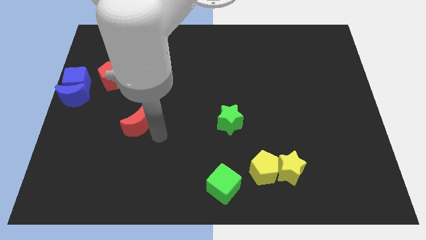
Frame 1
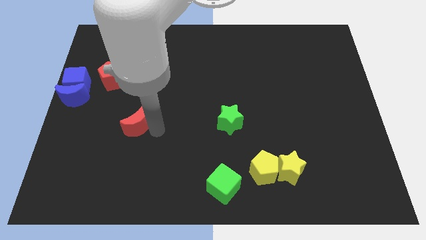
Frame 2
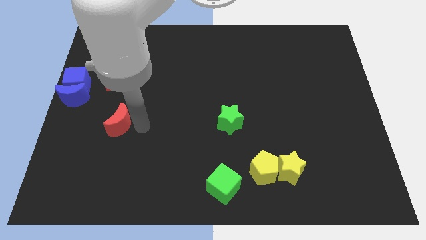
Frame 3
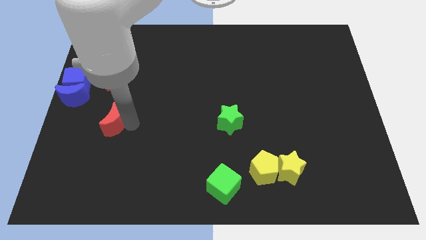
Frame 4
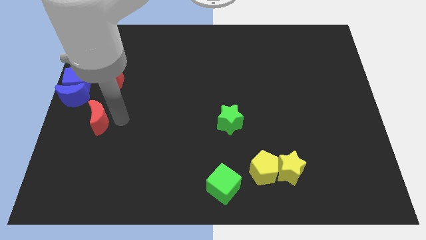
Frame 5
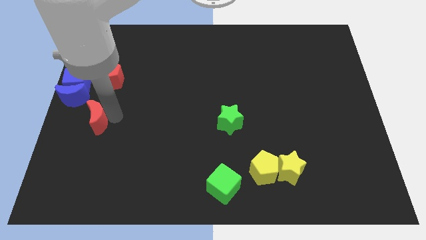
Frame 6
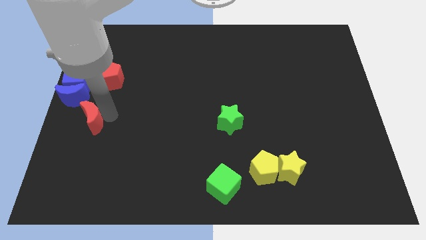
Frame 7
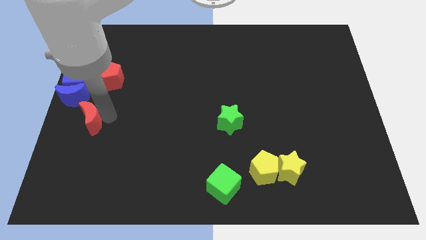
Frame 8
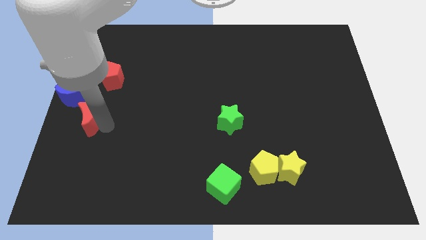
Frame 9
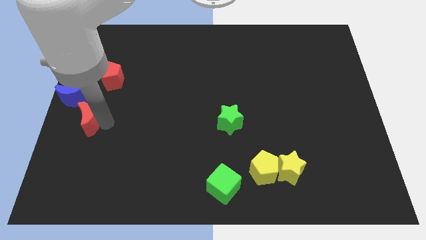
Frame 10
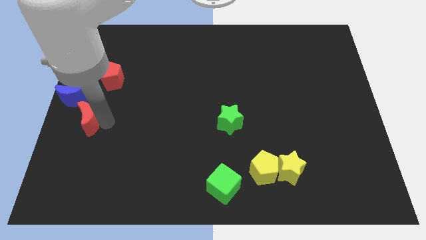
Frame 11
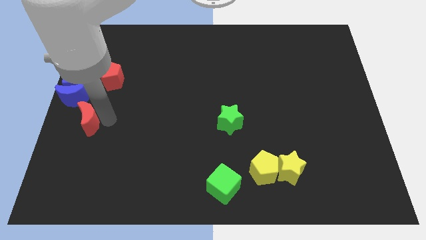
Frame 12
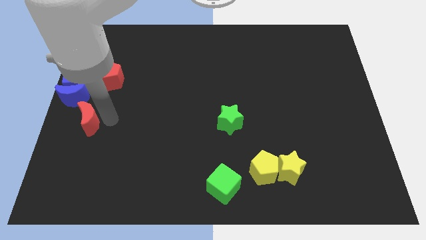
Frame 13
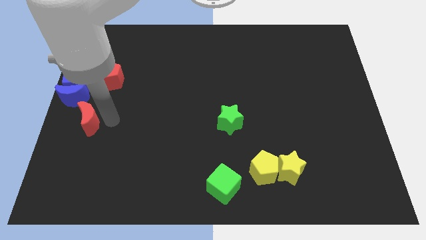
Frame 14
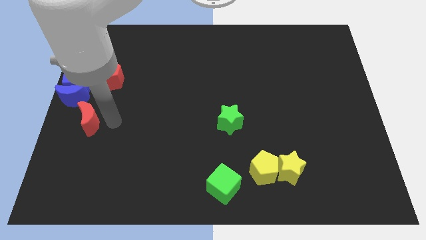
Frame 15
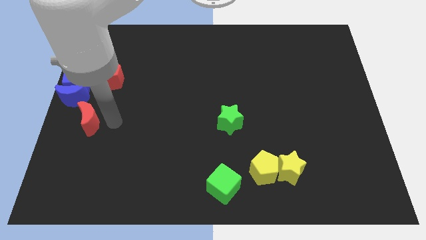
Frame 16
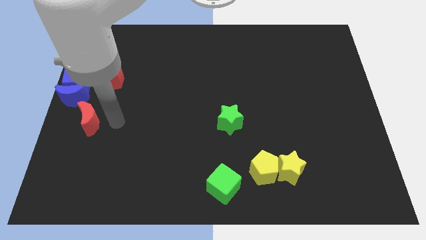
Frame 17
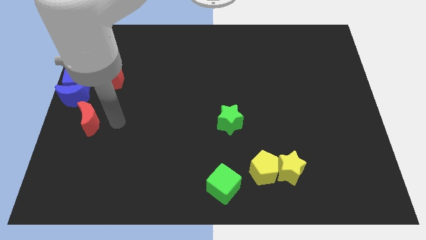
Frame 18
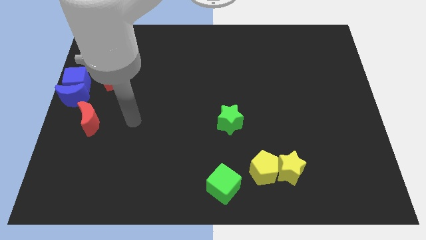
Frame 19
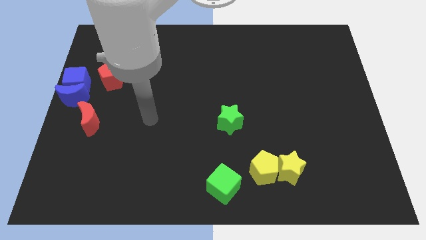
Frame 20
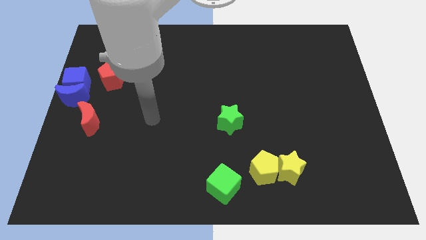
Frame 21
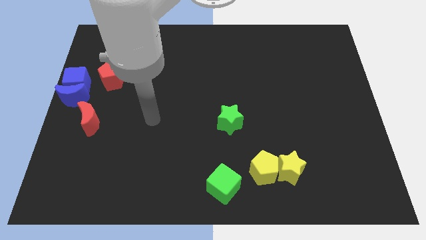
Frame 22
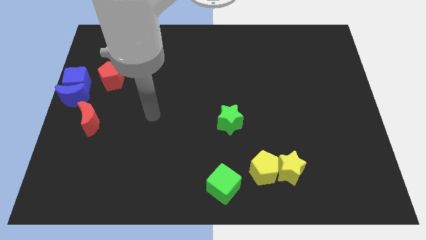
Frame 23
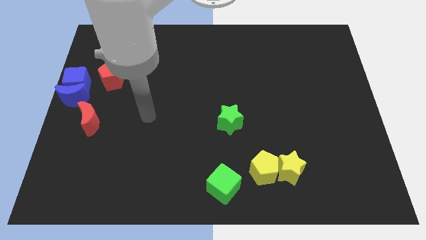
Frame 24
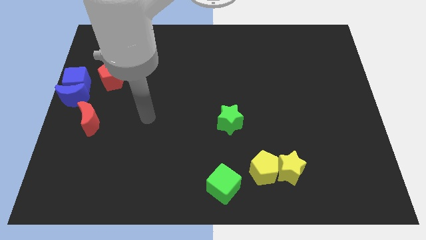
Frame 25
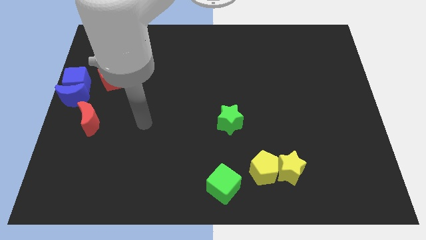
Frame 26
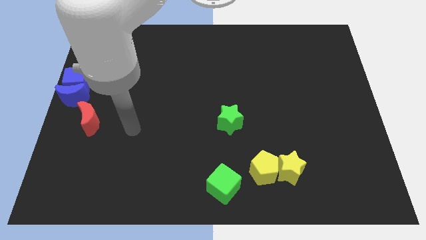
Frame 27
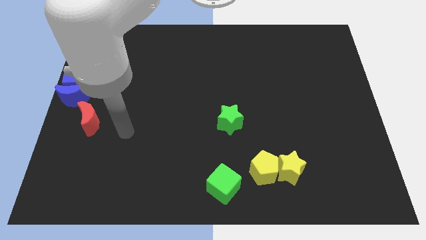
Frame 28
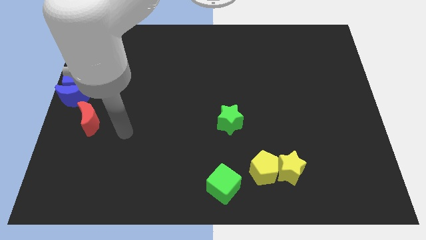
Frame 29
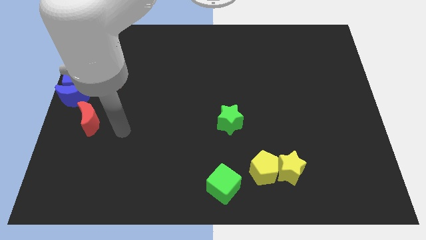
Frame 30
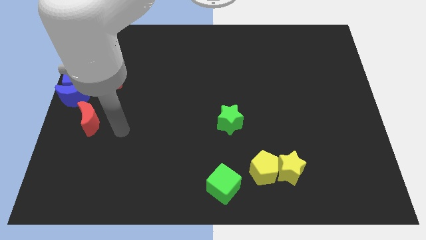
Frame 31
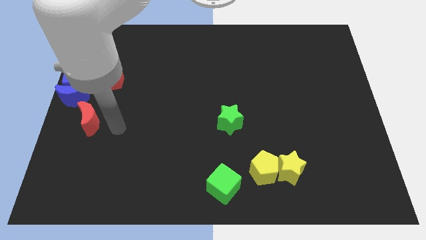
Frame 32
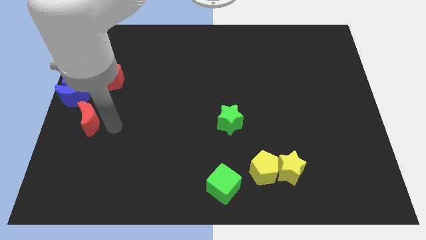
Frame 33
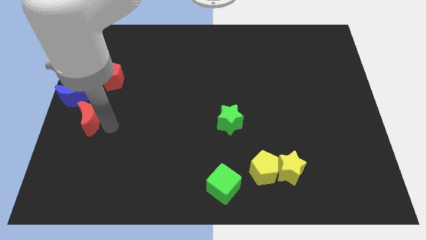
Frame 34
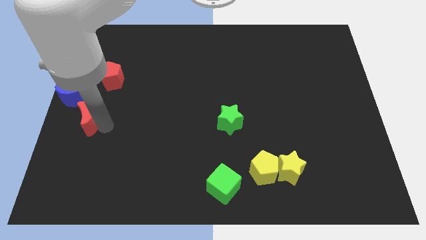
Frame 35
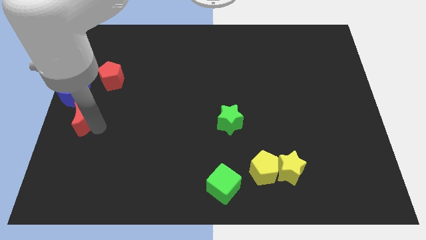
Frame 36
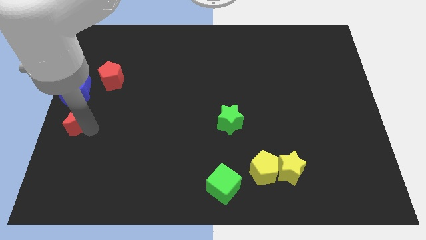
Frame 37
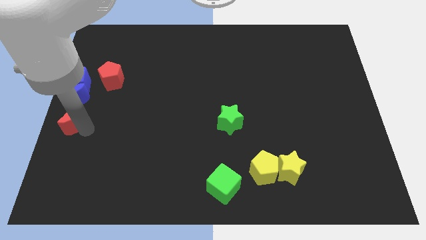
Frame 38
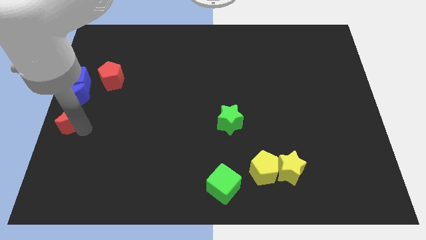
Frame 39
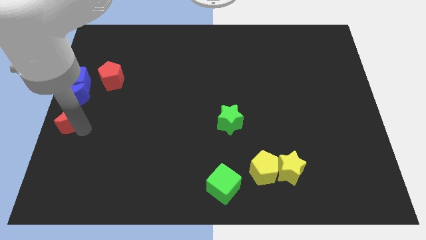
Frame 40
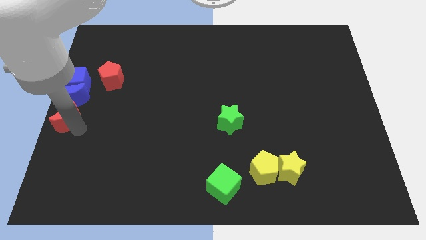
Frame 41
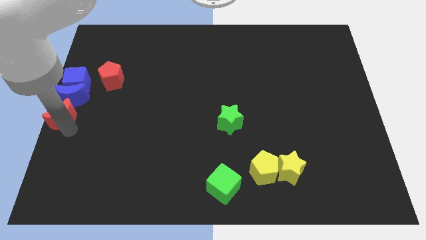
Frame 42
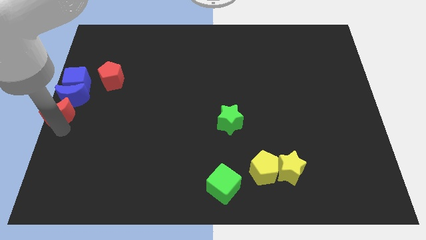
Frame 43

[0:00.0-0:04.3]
push the red crescent to the left center of the board

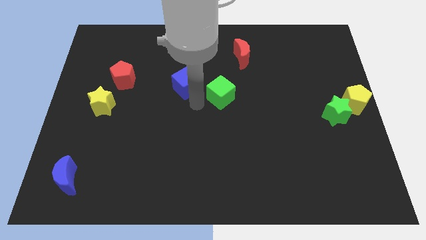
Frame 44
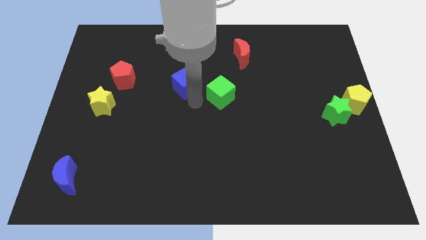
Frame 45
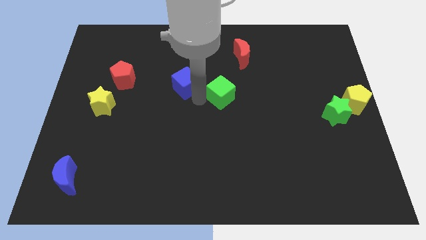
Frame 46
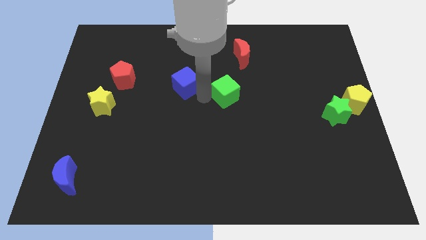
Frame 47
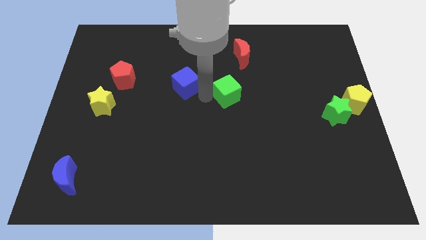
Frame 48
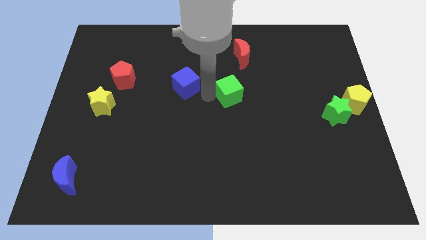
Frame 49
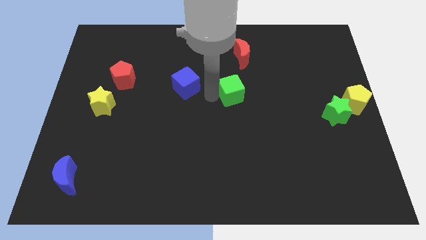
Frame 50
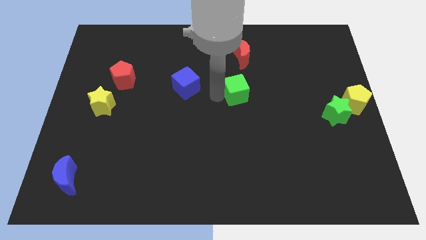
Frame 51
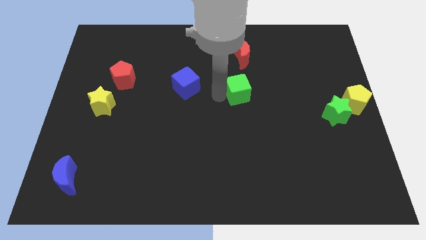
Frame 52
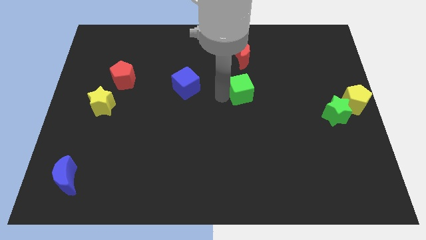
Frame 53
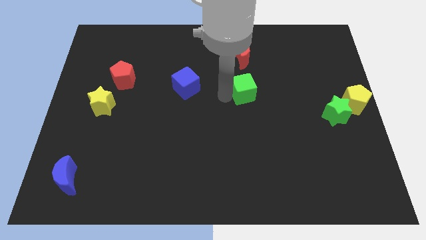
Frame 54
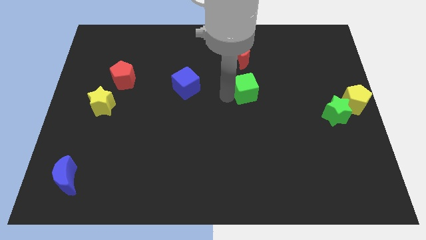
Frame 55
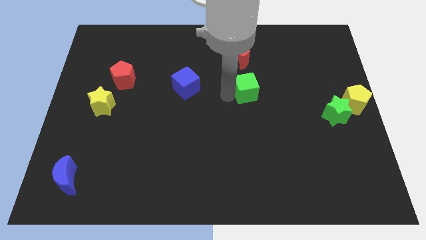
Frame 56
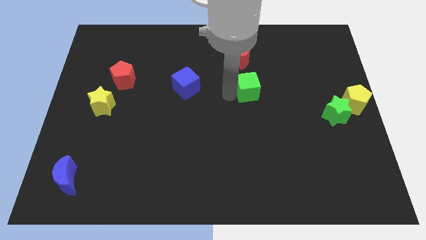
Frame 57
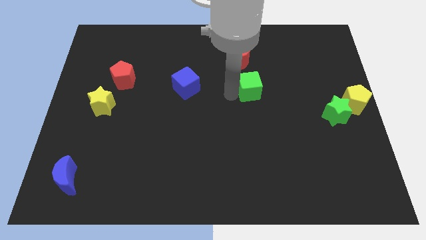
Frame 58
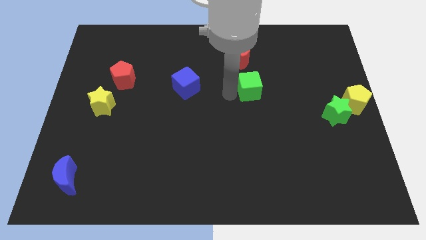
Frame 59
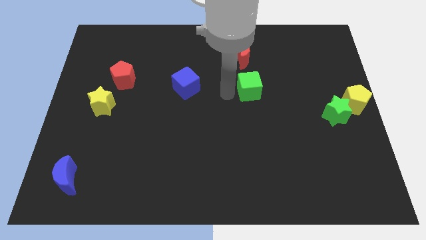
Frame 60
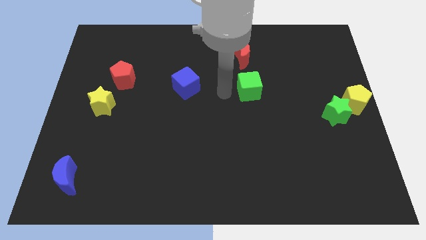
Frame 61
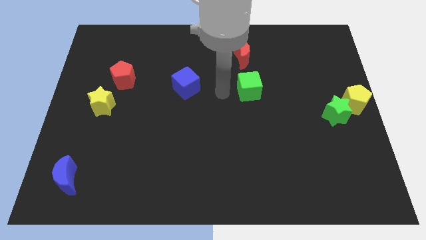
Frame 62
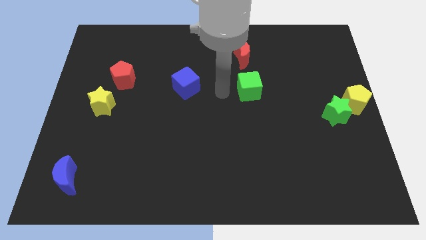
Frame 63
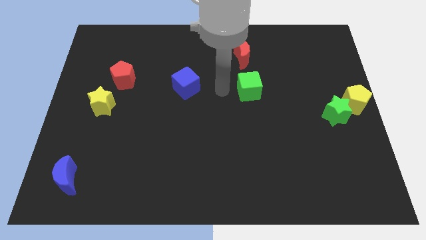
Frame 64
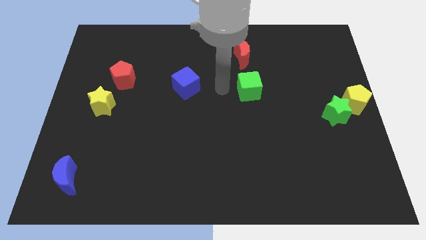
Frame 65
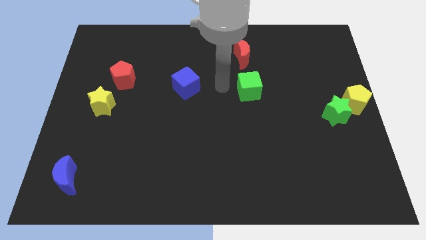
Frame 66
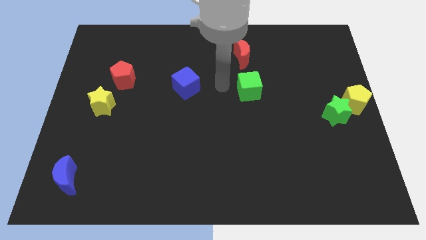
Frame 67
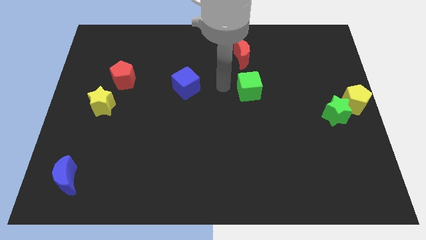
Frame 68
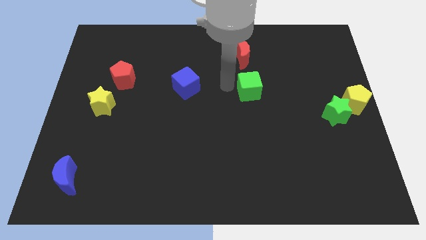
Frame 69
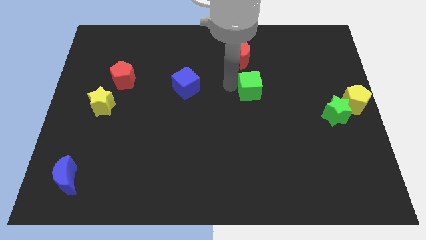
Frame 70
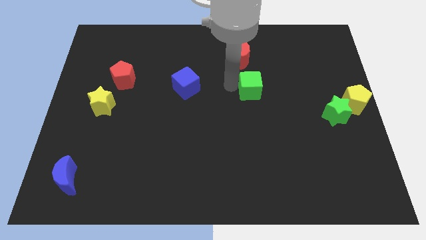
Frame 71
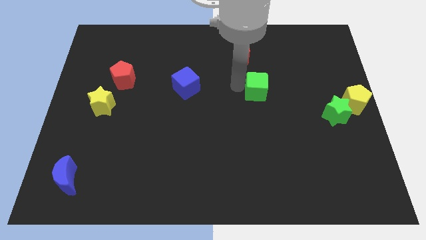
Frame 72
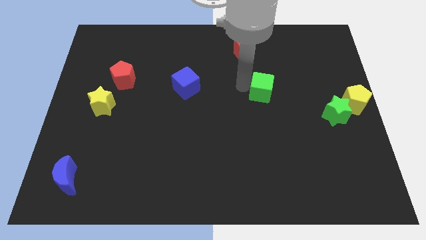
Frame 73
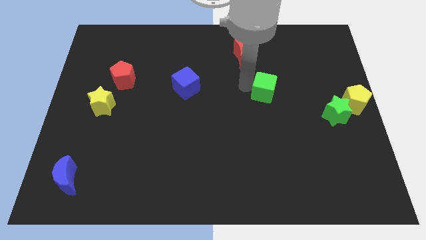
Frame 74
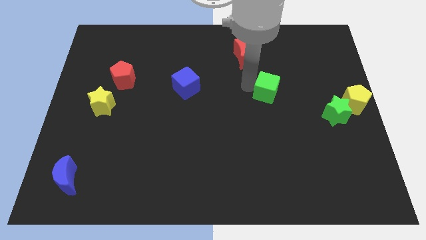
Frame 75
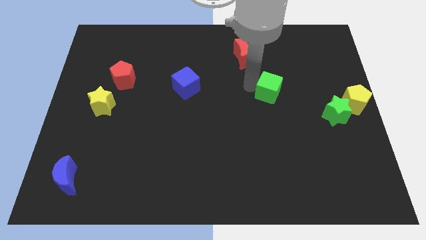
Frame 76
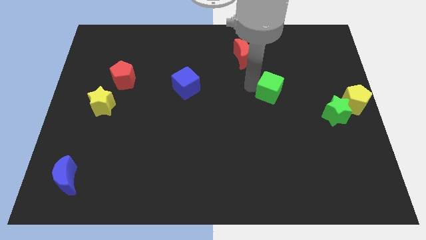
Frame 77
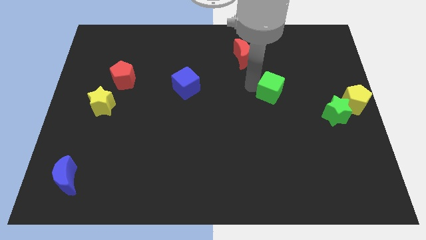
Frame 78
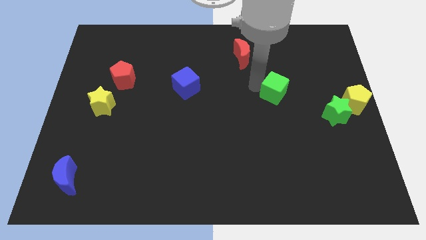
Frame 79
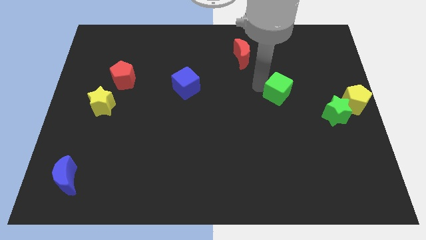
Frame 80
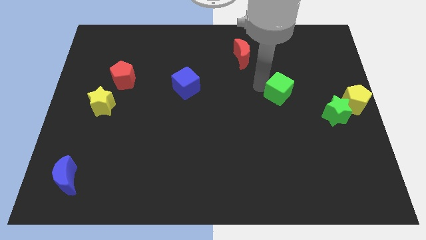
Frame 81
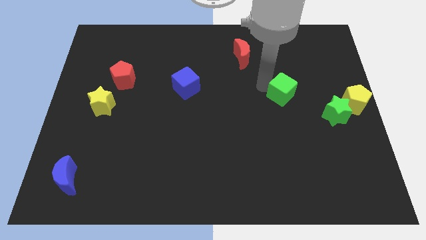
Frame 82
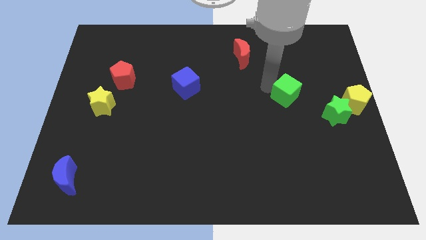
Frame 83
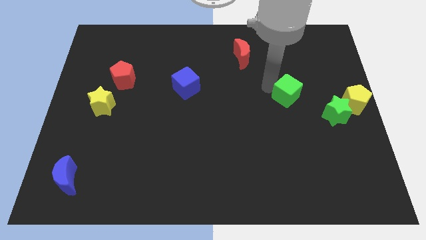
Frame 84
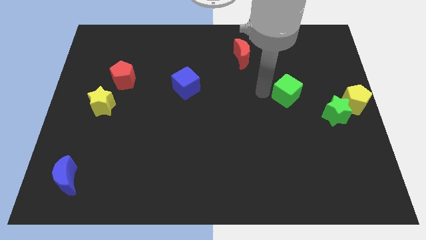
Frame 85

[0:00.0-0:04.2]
push the green cube towards the green star

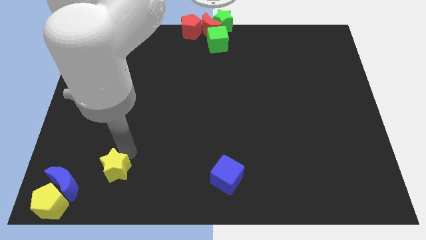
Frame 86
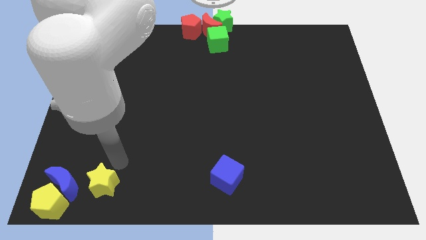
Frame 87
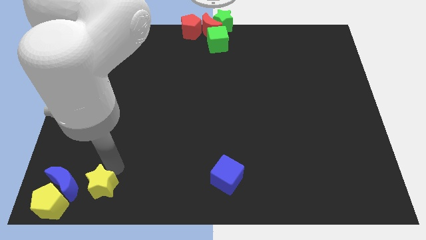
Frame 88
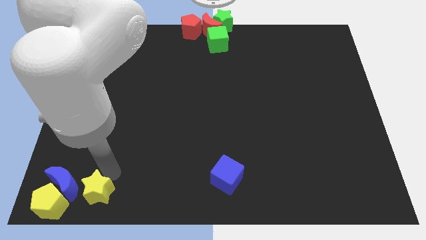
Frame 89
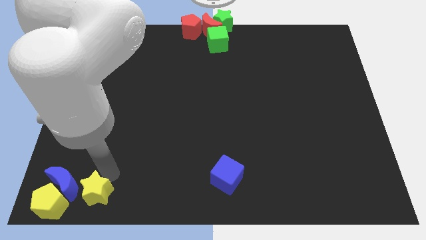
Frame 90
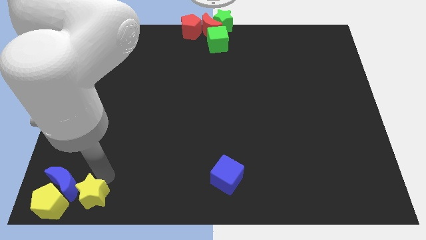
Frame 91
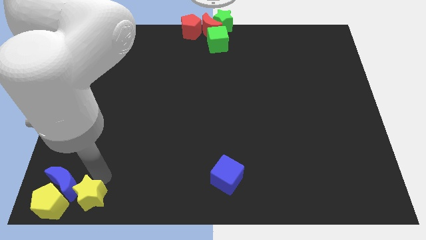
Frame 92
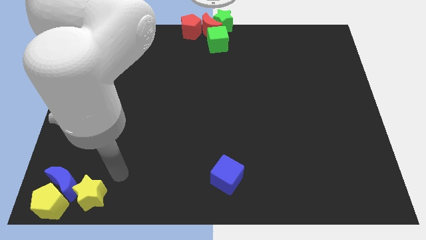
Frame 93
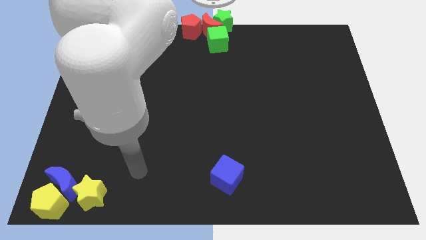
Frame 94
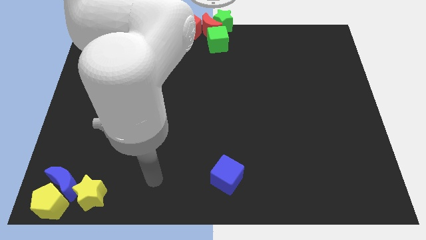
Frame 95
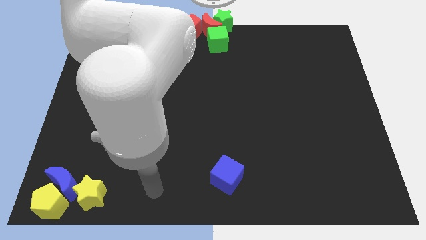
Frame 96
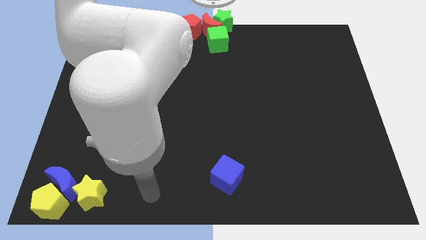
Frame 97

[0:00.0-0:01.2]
move the yellow star towards the bottom left of the board
